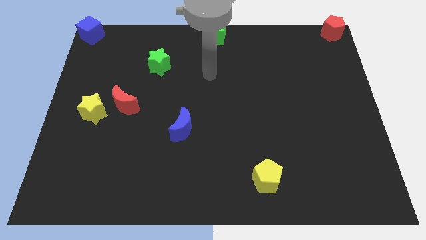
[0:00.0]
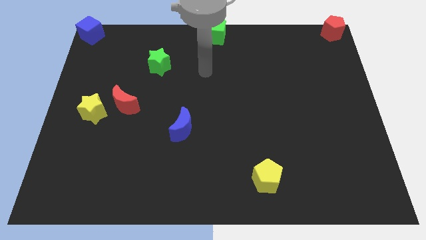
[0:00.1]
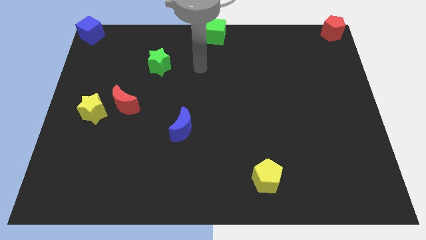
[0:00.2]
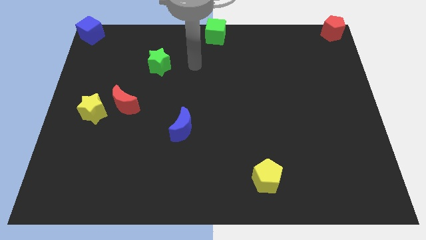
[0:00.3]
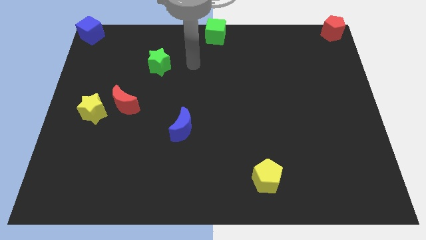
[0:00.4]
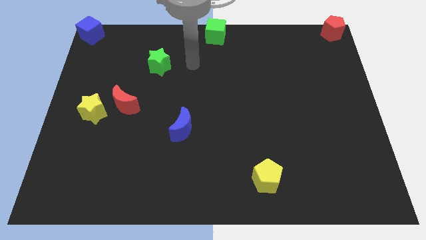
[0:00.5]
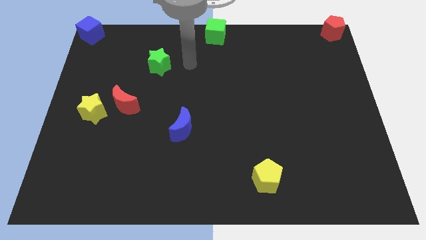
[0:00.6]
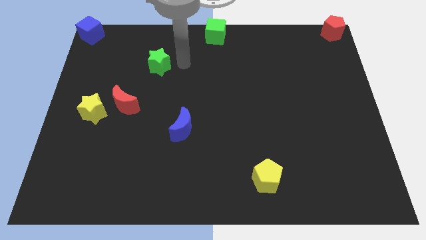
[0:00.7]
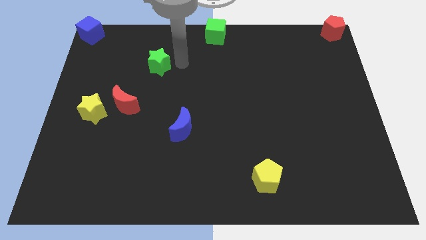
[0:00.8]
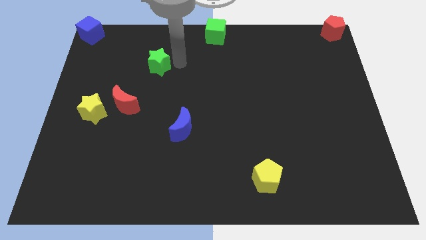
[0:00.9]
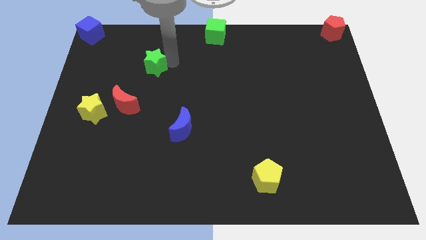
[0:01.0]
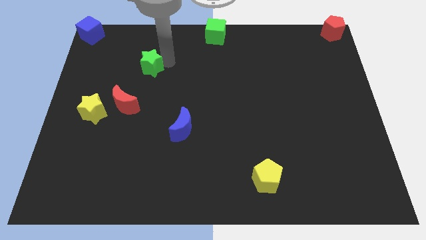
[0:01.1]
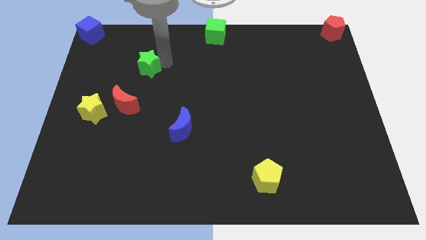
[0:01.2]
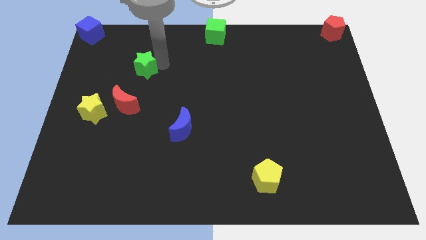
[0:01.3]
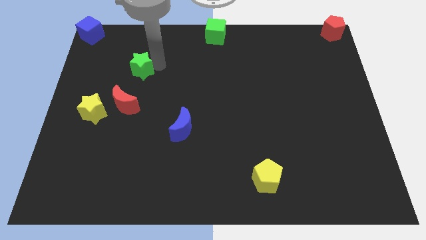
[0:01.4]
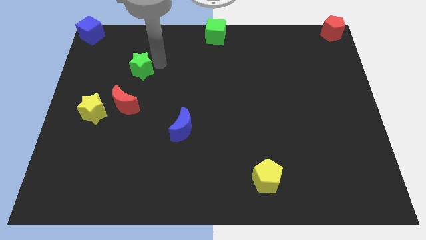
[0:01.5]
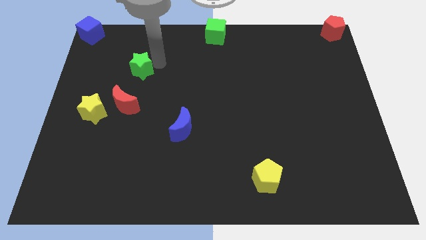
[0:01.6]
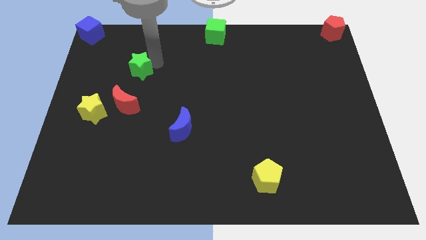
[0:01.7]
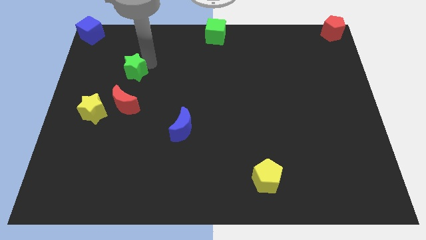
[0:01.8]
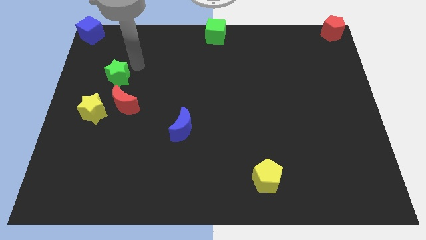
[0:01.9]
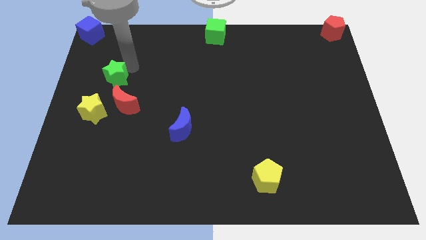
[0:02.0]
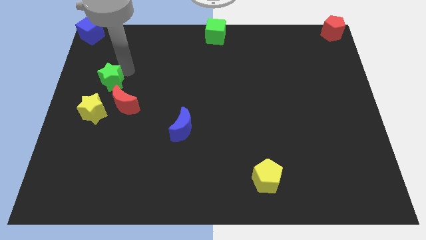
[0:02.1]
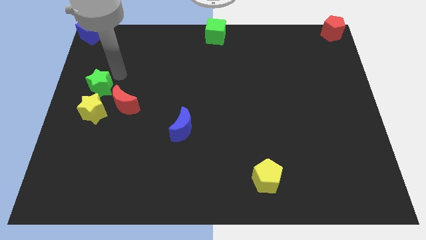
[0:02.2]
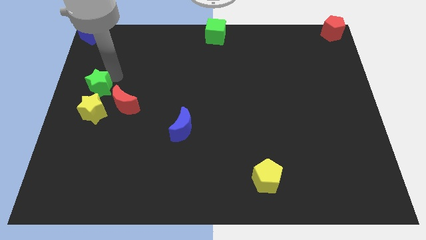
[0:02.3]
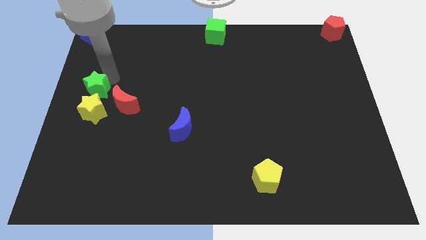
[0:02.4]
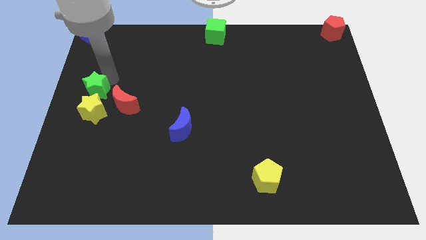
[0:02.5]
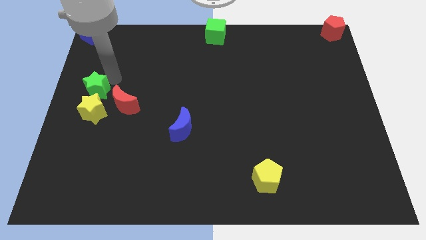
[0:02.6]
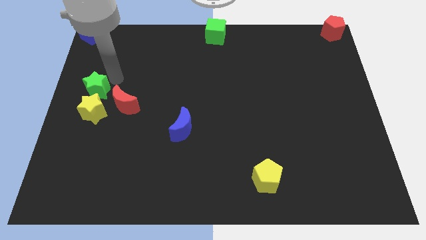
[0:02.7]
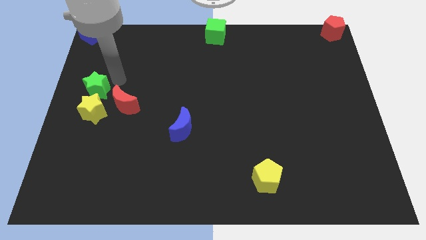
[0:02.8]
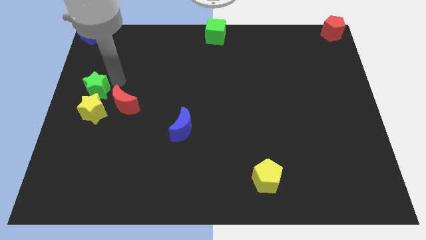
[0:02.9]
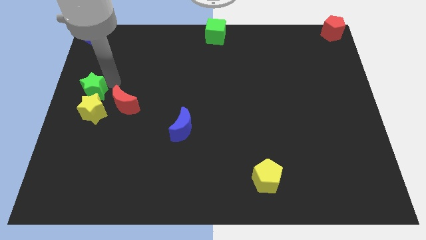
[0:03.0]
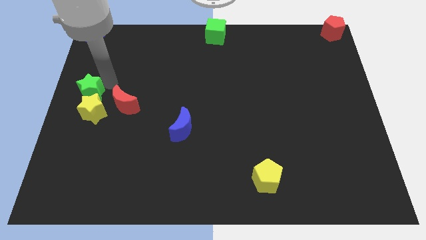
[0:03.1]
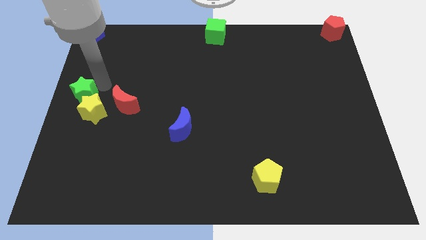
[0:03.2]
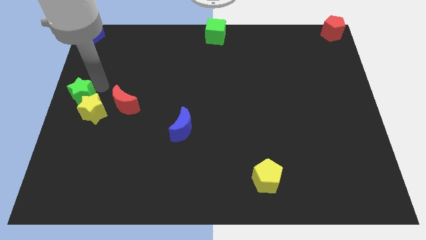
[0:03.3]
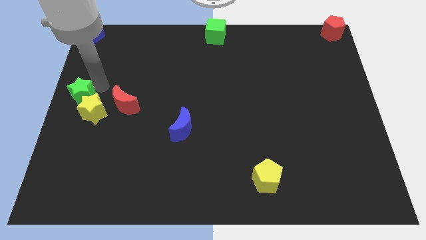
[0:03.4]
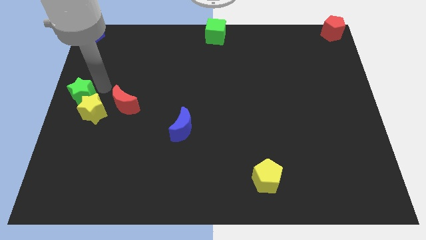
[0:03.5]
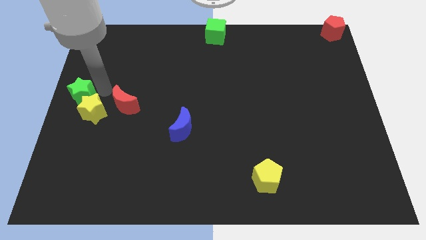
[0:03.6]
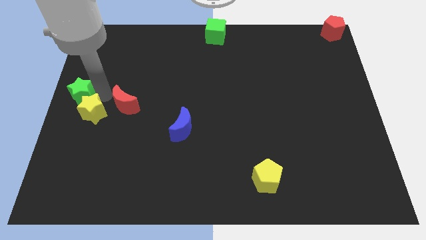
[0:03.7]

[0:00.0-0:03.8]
place the green star to the center left

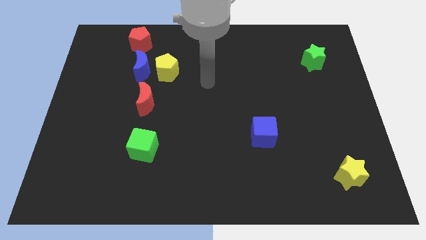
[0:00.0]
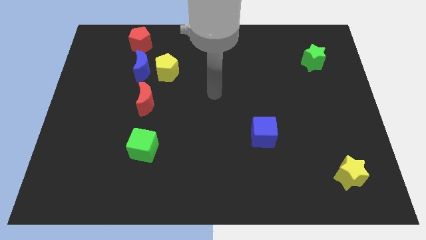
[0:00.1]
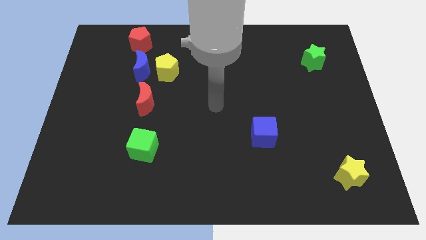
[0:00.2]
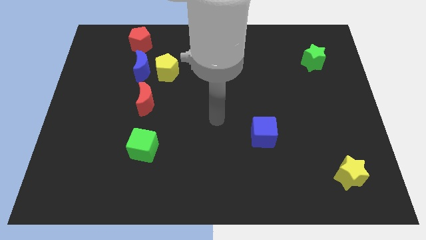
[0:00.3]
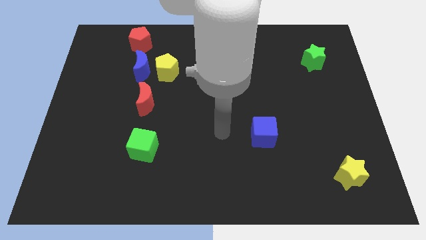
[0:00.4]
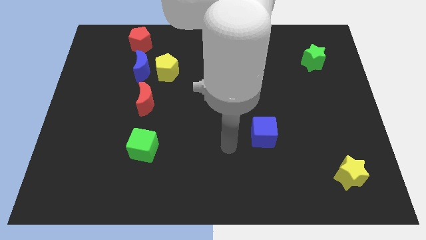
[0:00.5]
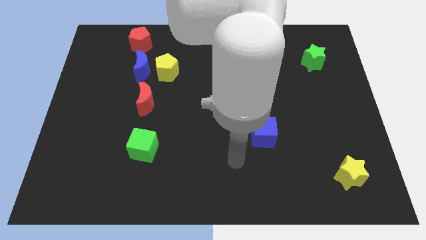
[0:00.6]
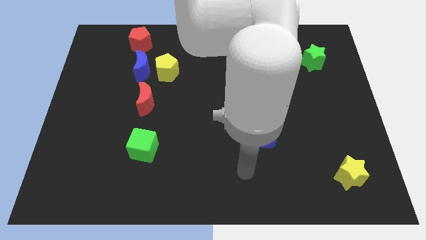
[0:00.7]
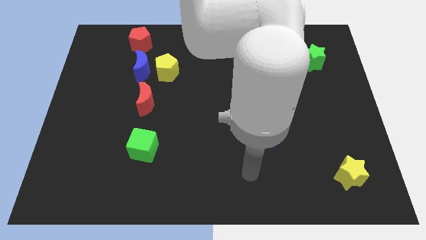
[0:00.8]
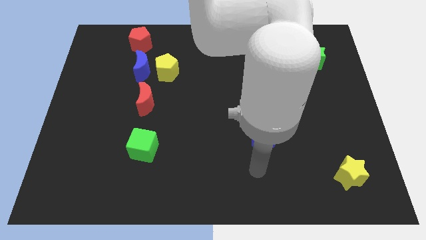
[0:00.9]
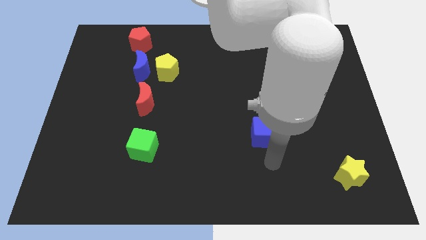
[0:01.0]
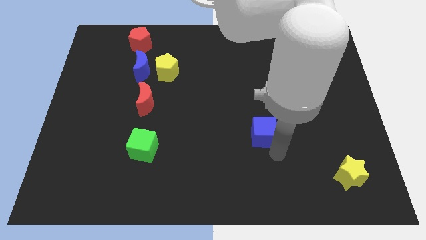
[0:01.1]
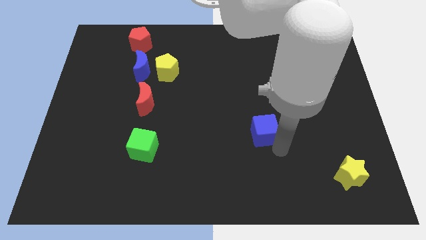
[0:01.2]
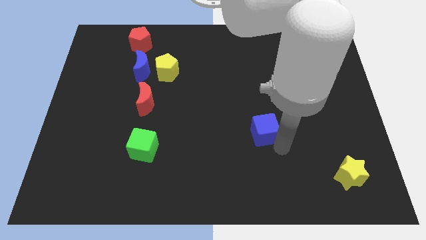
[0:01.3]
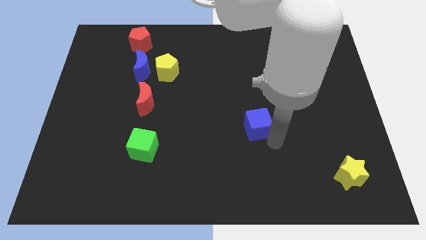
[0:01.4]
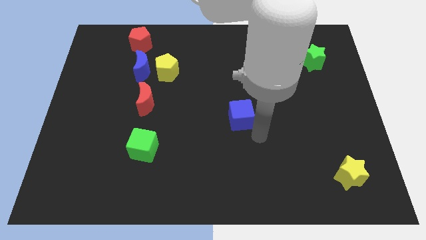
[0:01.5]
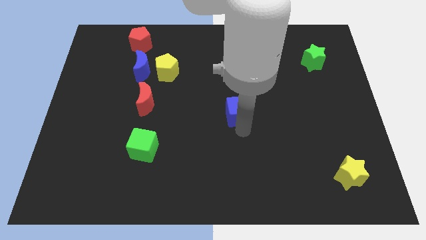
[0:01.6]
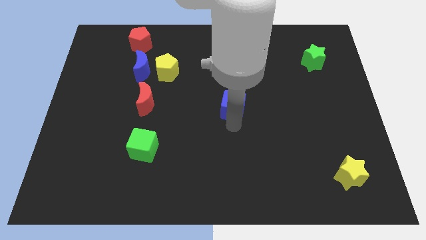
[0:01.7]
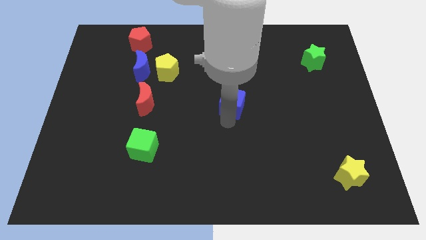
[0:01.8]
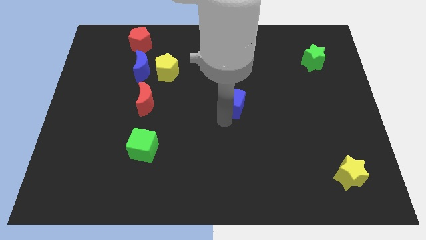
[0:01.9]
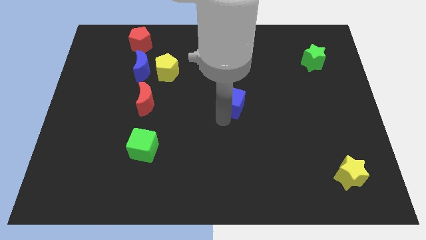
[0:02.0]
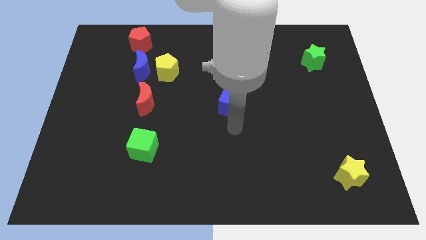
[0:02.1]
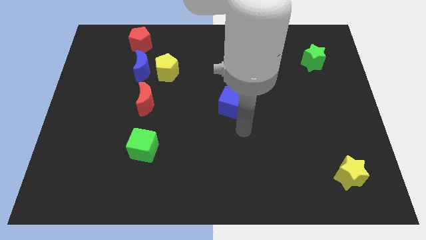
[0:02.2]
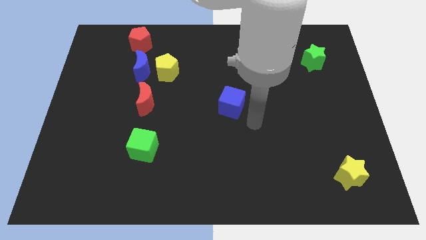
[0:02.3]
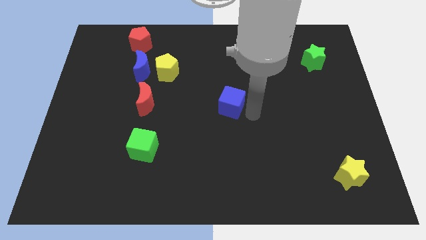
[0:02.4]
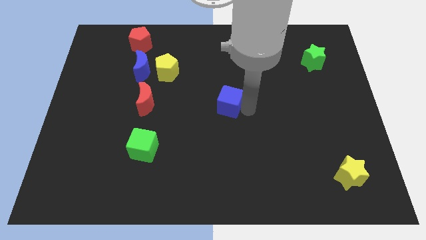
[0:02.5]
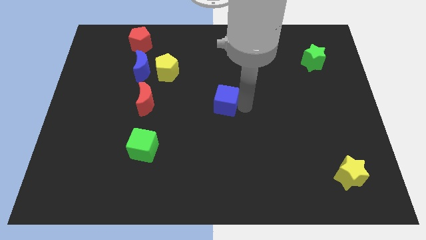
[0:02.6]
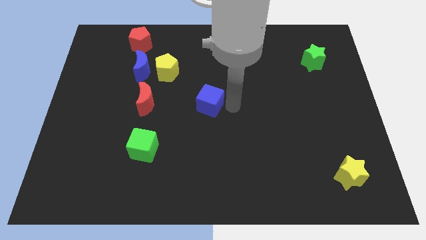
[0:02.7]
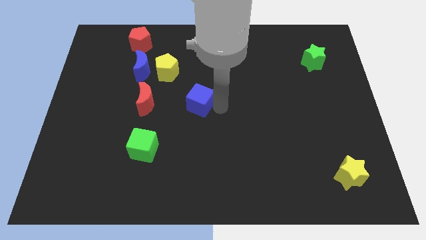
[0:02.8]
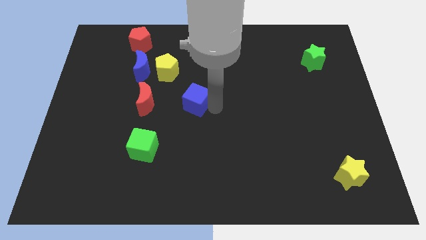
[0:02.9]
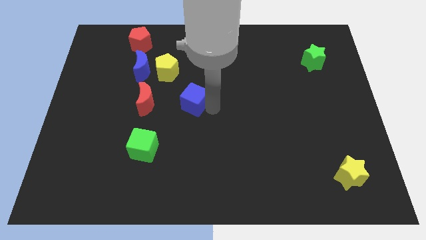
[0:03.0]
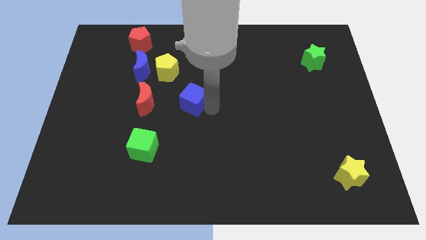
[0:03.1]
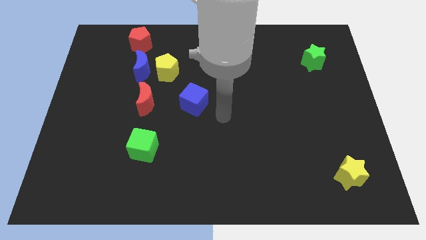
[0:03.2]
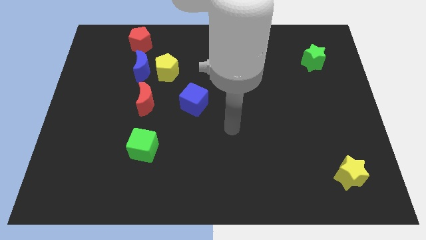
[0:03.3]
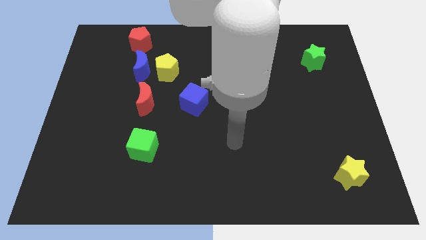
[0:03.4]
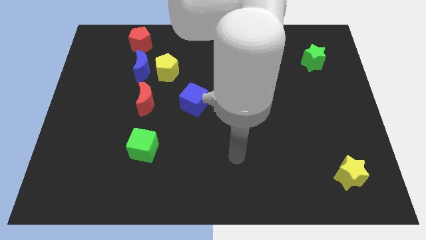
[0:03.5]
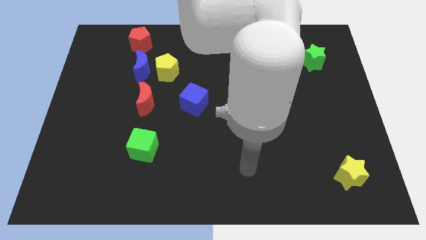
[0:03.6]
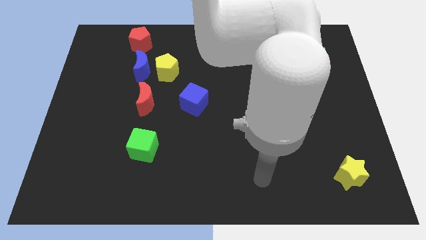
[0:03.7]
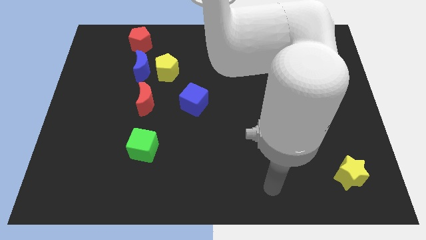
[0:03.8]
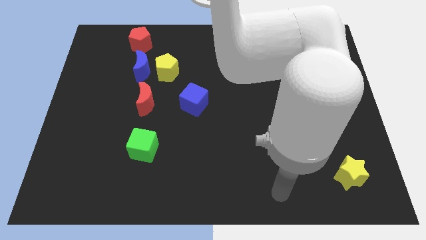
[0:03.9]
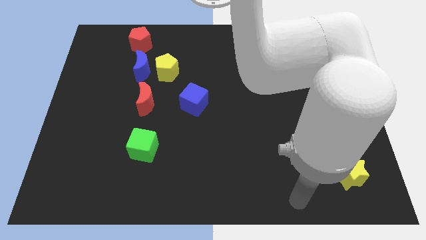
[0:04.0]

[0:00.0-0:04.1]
push the blue cube to the right of the red crescent

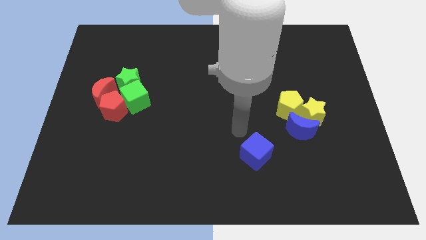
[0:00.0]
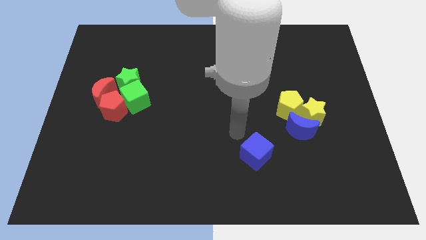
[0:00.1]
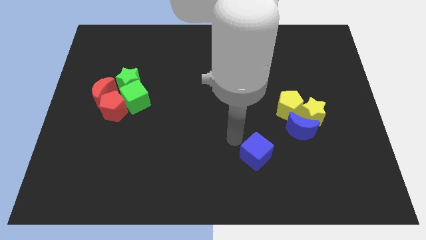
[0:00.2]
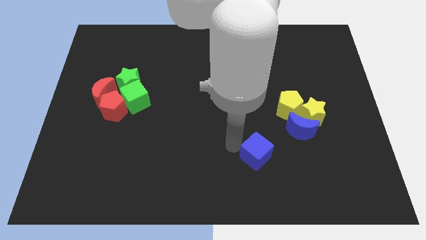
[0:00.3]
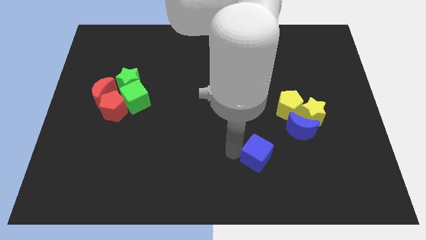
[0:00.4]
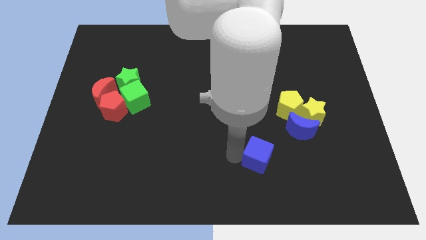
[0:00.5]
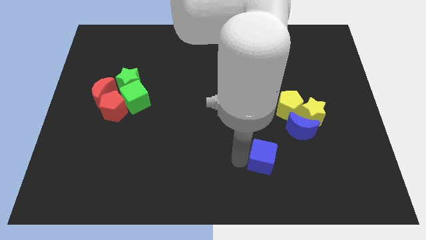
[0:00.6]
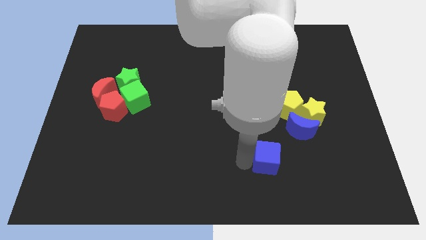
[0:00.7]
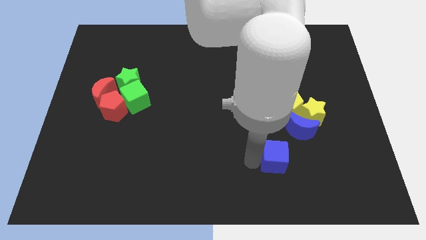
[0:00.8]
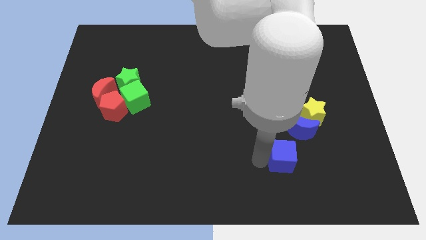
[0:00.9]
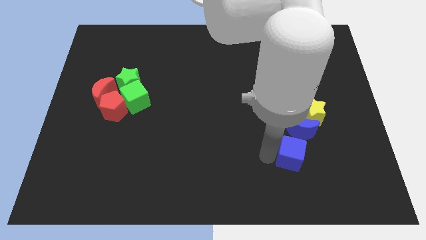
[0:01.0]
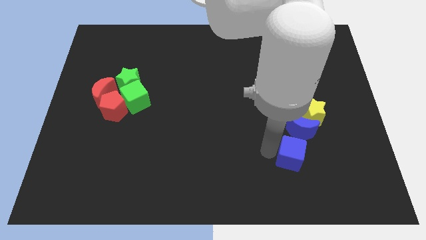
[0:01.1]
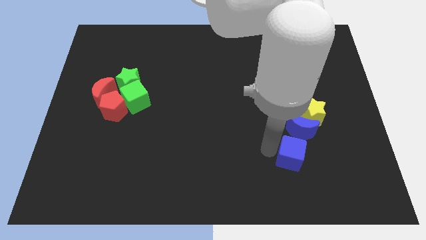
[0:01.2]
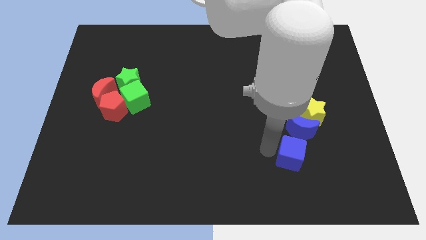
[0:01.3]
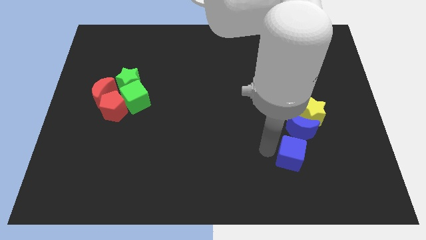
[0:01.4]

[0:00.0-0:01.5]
place the blue cube below the blue crescent
